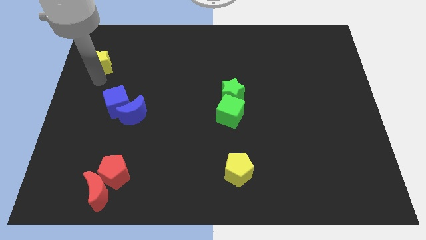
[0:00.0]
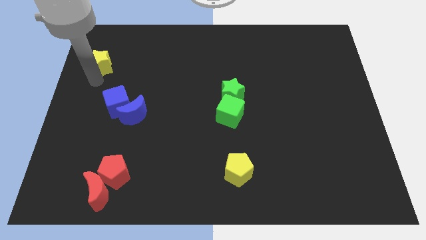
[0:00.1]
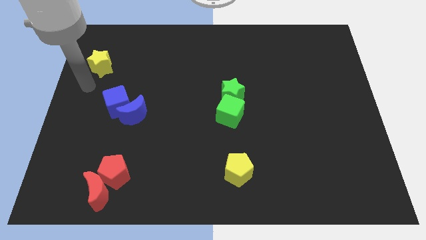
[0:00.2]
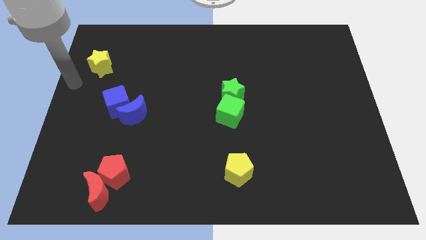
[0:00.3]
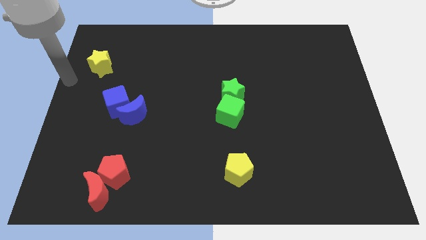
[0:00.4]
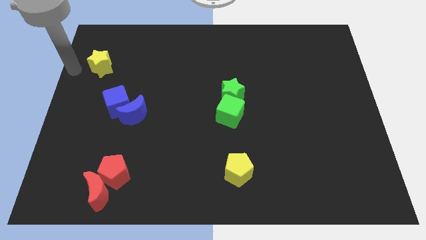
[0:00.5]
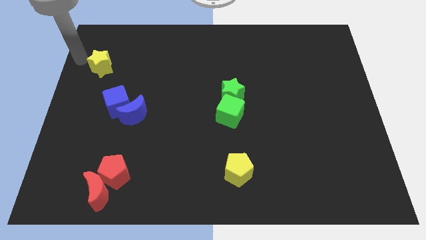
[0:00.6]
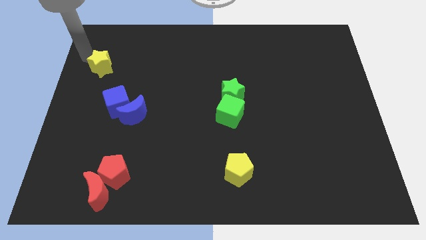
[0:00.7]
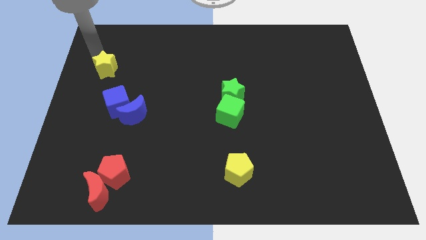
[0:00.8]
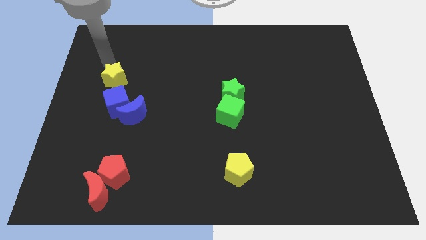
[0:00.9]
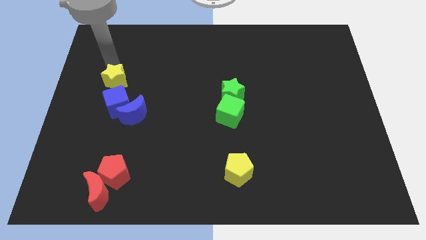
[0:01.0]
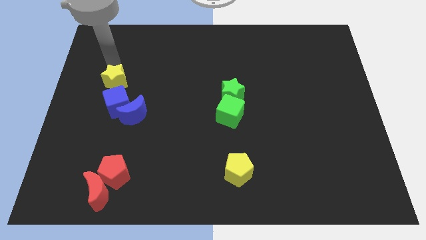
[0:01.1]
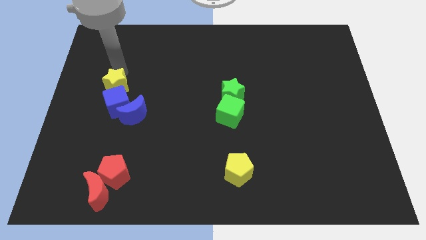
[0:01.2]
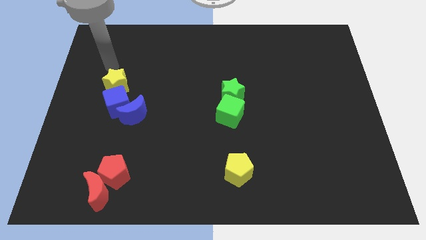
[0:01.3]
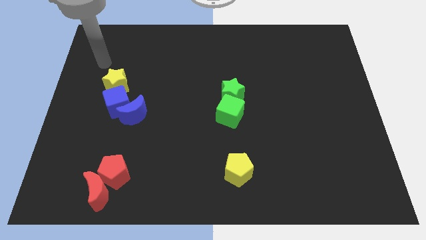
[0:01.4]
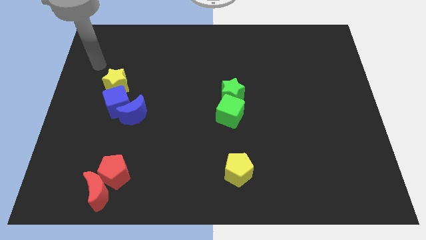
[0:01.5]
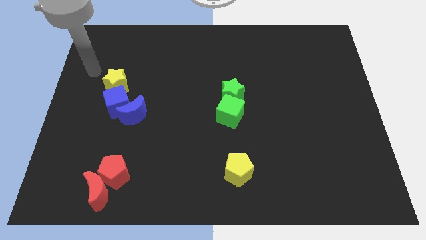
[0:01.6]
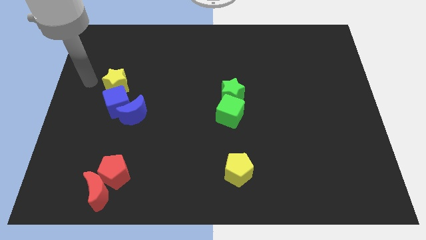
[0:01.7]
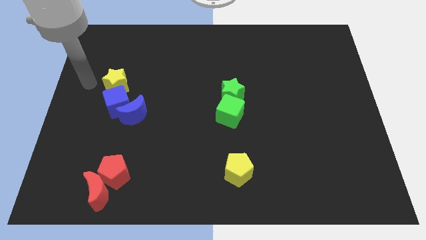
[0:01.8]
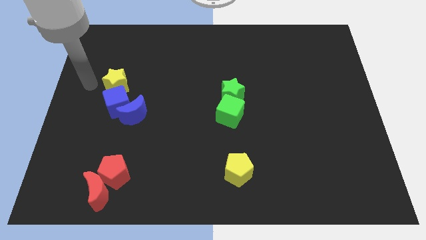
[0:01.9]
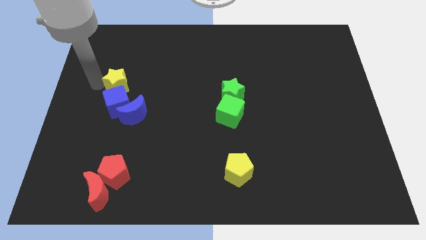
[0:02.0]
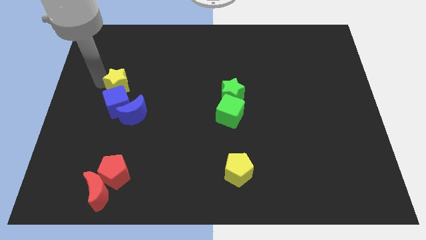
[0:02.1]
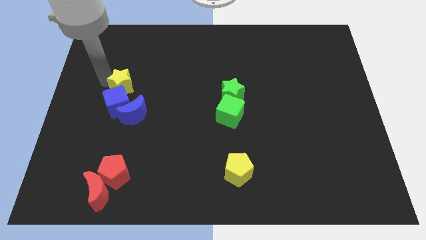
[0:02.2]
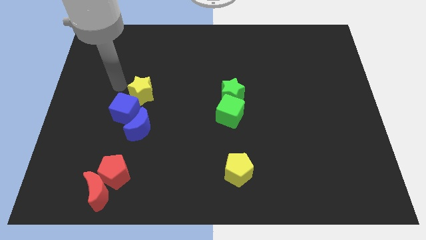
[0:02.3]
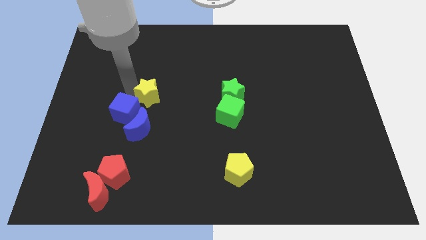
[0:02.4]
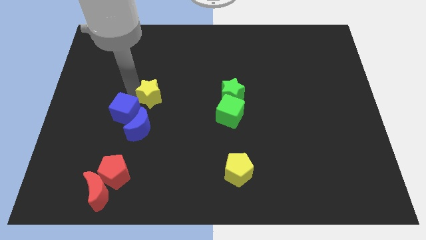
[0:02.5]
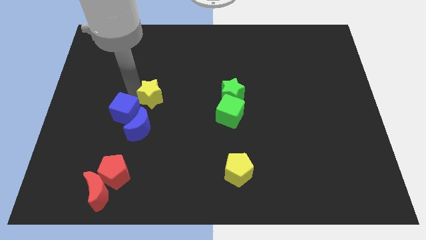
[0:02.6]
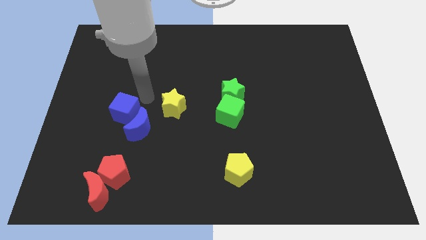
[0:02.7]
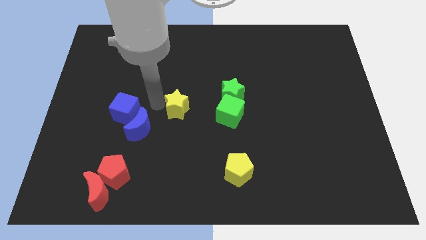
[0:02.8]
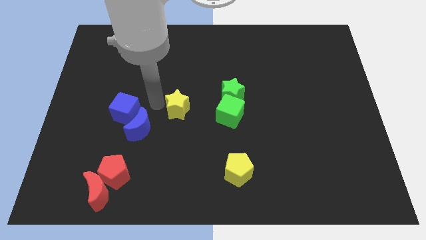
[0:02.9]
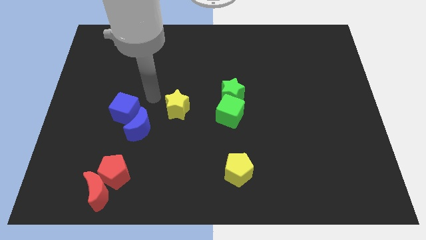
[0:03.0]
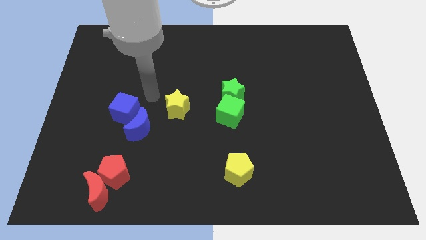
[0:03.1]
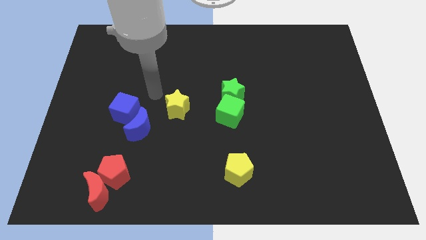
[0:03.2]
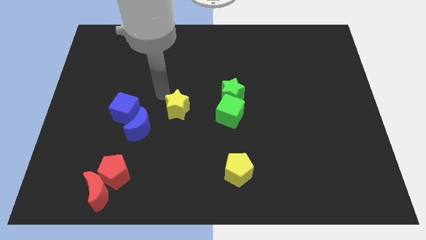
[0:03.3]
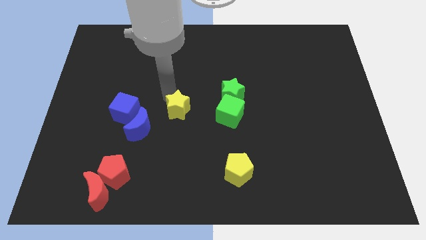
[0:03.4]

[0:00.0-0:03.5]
drag yellow star towards center of the board

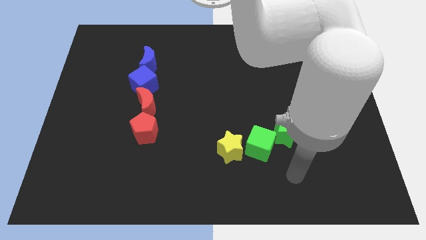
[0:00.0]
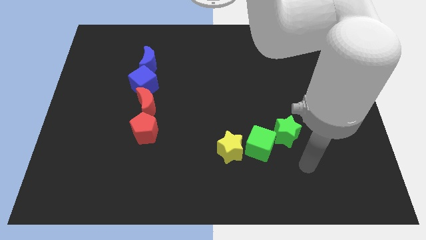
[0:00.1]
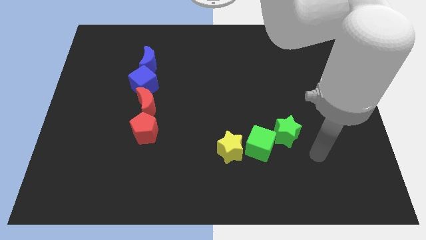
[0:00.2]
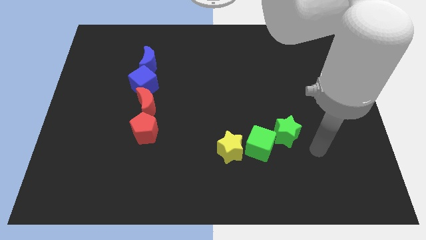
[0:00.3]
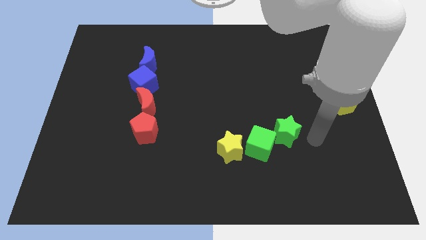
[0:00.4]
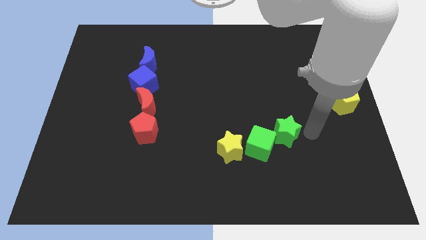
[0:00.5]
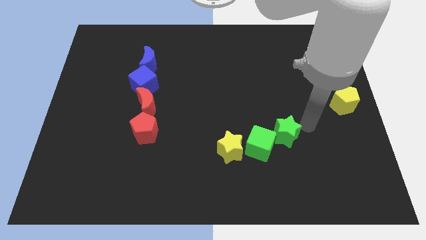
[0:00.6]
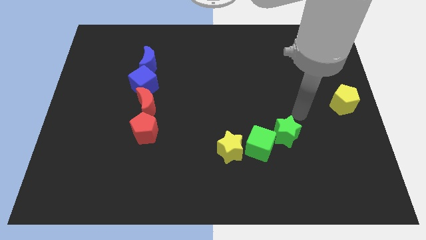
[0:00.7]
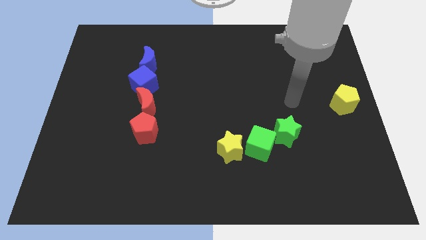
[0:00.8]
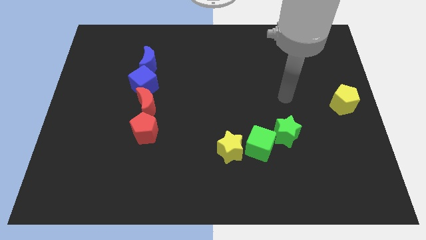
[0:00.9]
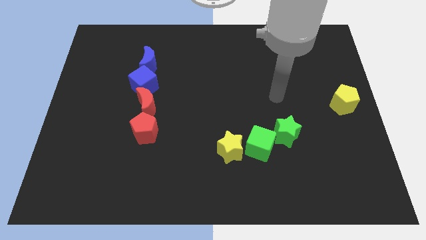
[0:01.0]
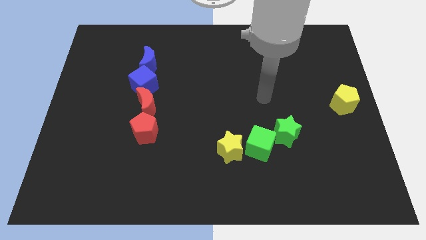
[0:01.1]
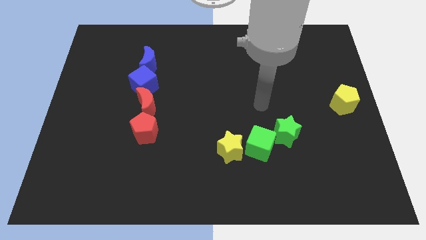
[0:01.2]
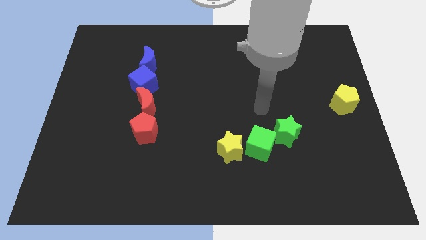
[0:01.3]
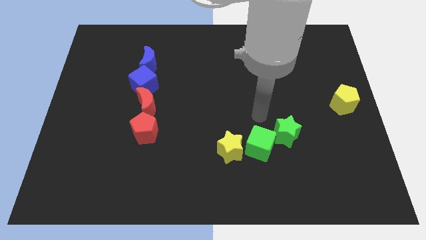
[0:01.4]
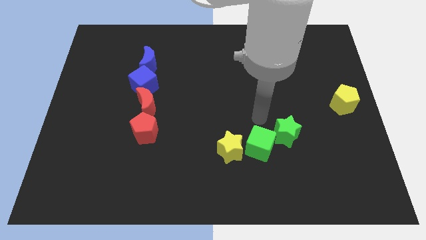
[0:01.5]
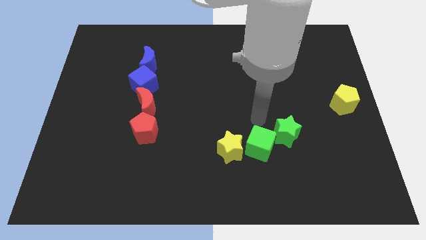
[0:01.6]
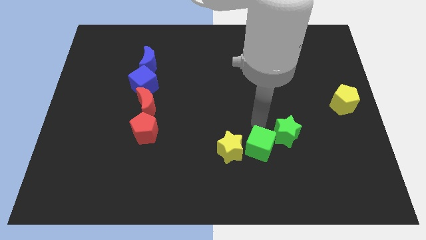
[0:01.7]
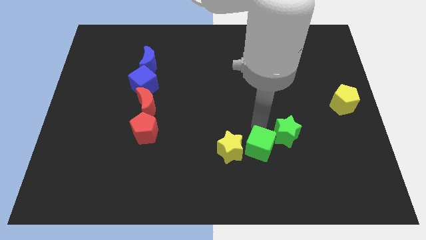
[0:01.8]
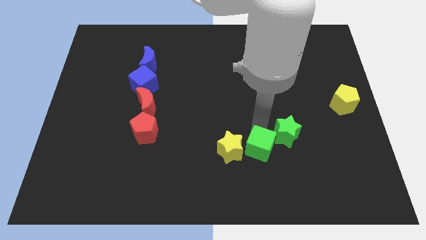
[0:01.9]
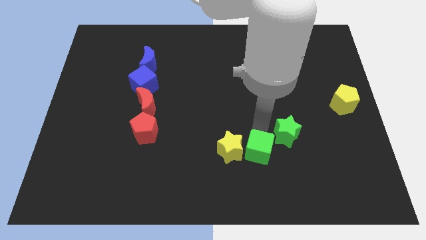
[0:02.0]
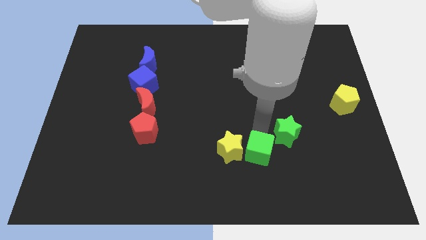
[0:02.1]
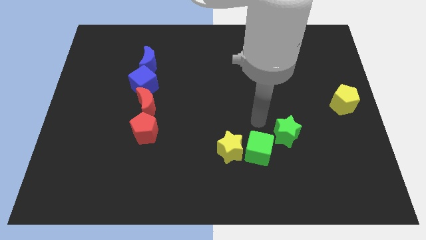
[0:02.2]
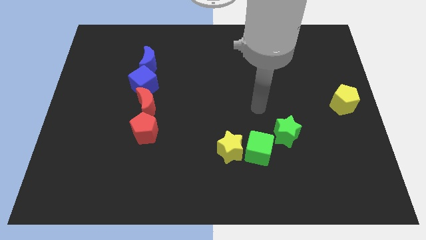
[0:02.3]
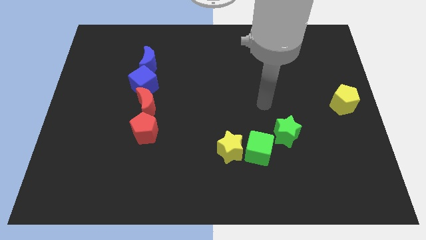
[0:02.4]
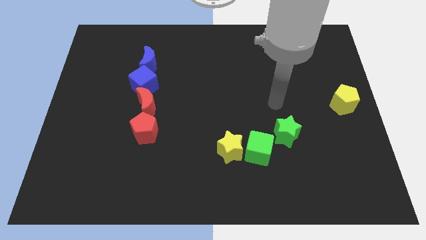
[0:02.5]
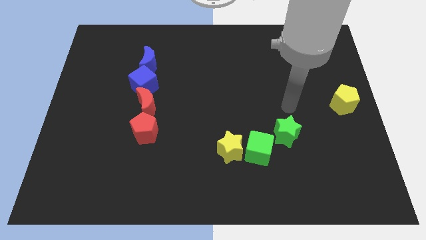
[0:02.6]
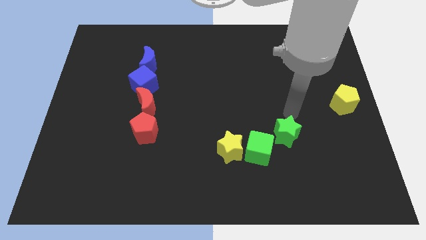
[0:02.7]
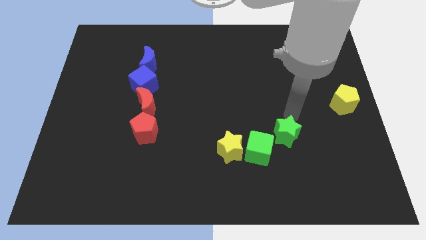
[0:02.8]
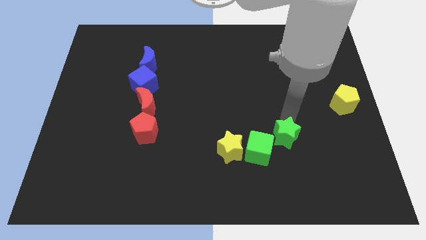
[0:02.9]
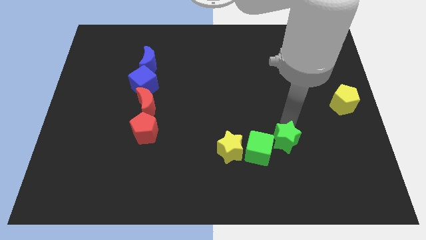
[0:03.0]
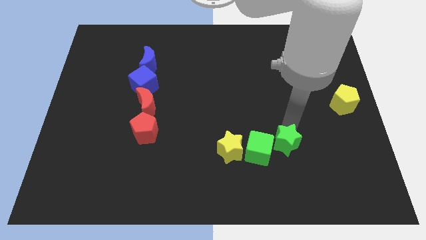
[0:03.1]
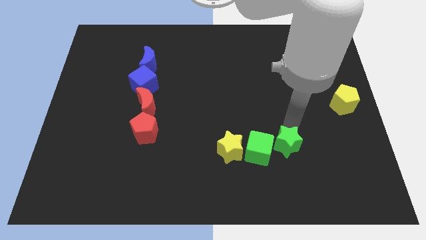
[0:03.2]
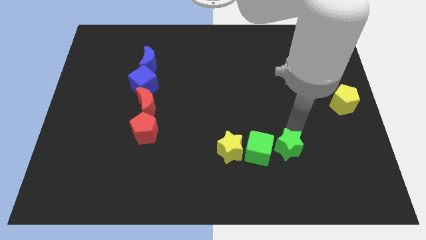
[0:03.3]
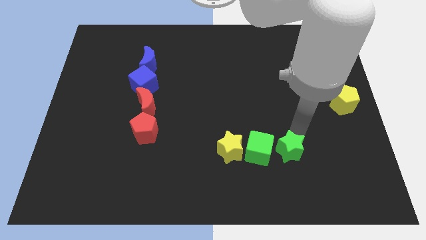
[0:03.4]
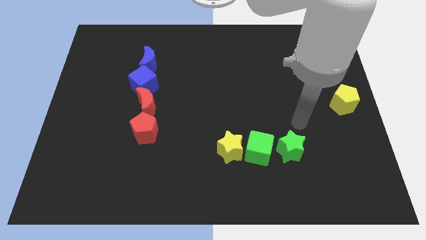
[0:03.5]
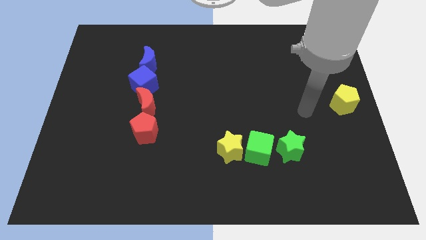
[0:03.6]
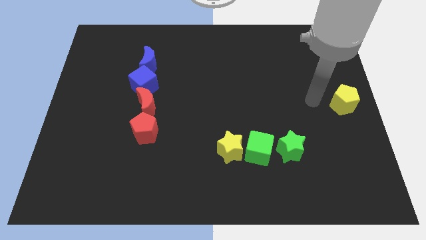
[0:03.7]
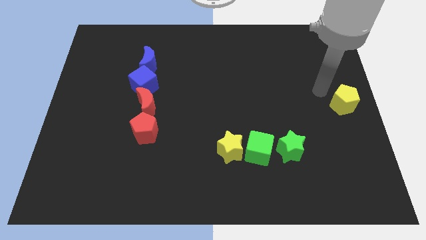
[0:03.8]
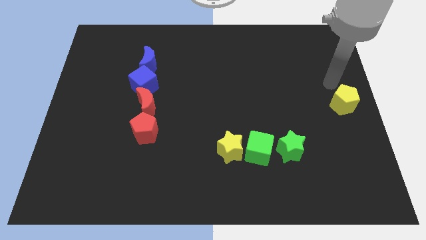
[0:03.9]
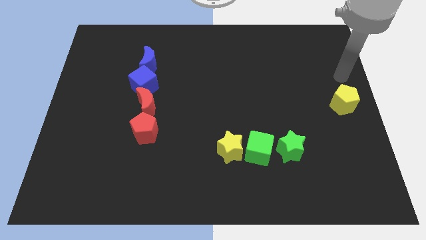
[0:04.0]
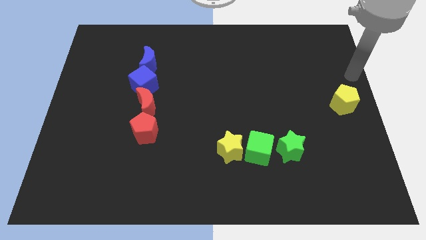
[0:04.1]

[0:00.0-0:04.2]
place the green cube in between the yellow star and the green star

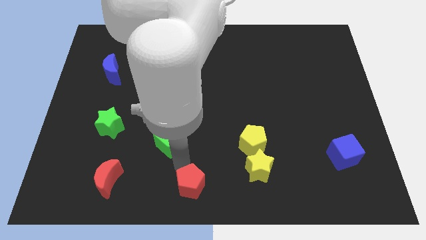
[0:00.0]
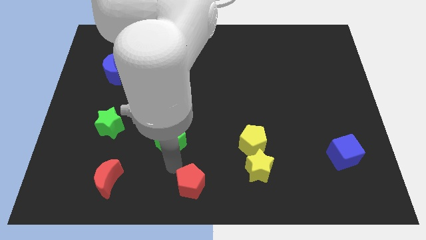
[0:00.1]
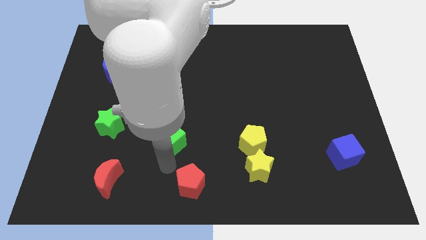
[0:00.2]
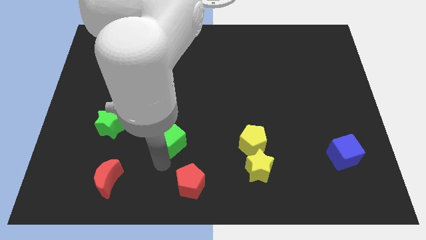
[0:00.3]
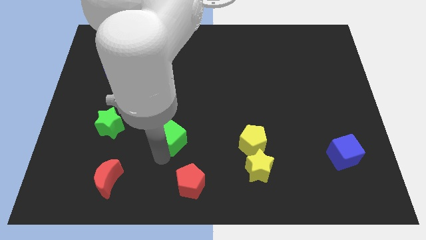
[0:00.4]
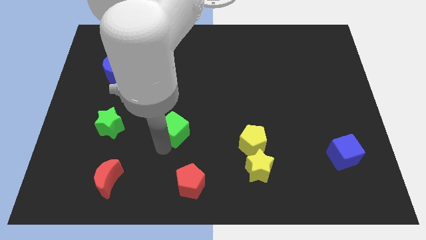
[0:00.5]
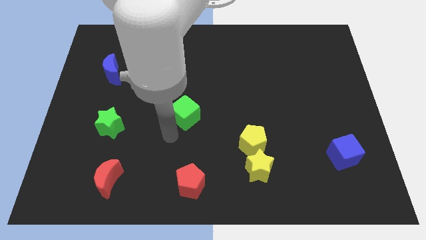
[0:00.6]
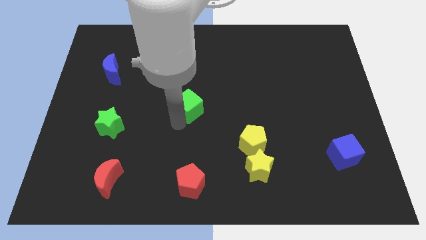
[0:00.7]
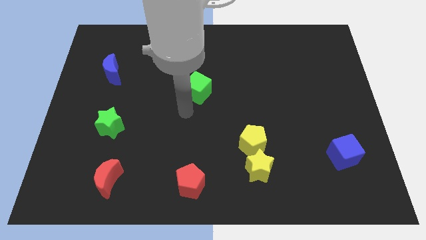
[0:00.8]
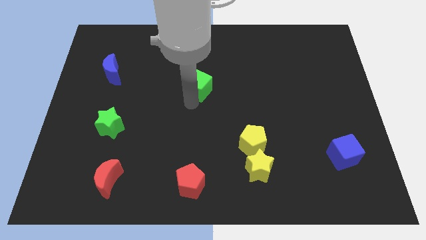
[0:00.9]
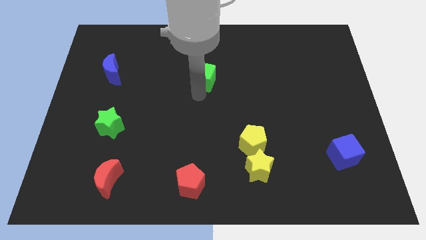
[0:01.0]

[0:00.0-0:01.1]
push the green cube towards the top side of the board

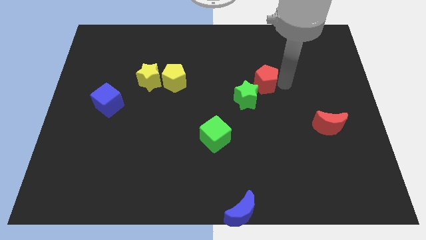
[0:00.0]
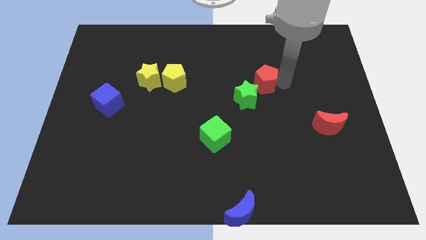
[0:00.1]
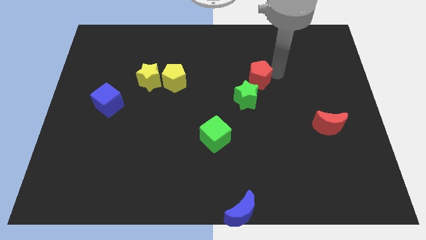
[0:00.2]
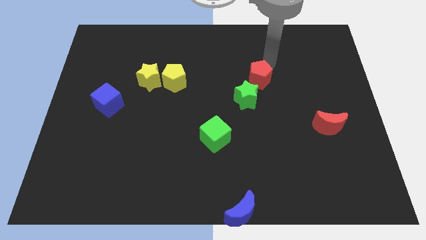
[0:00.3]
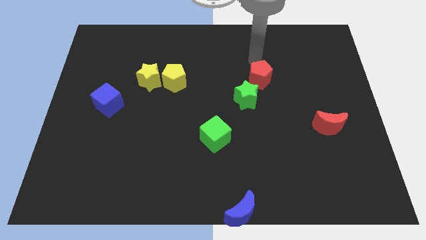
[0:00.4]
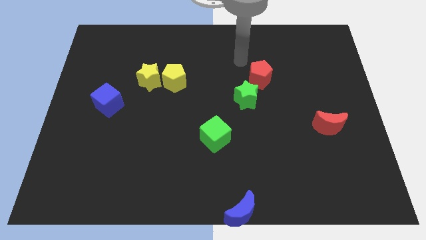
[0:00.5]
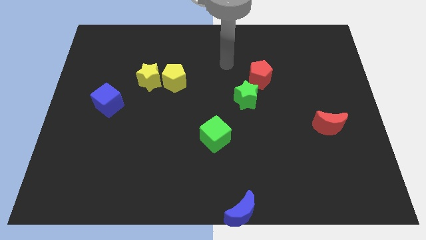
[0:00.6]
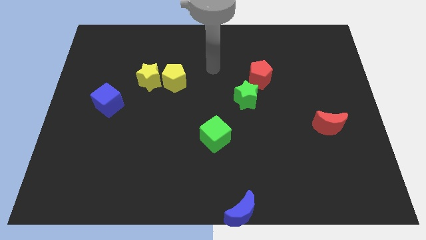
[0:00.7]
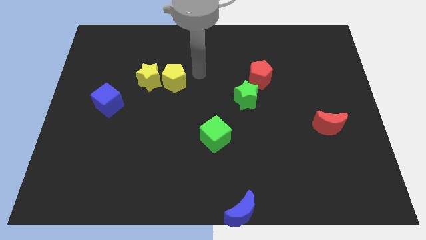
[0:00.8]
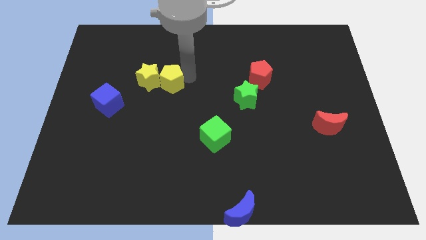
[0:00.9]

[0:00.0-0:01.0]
tap yellow pentagon on its top
